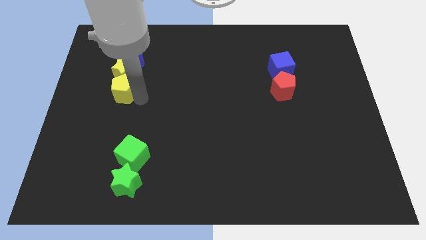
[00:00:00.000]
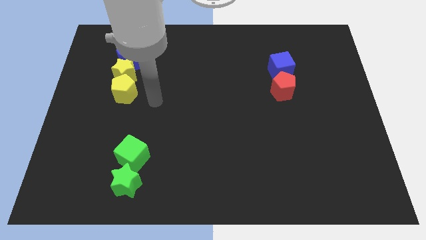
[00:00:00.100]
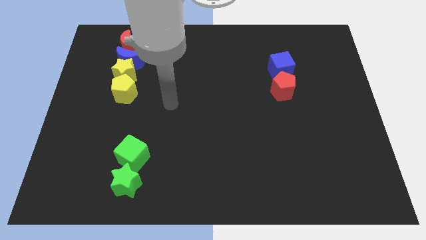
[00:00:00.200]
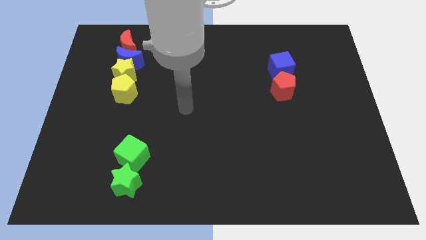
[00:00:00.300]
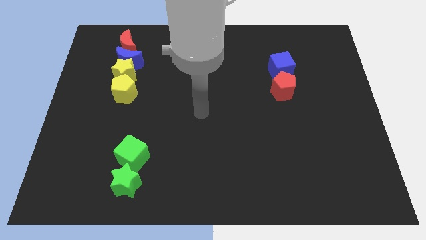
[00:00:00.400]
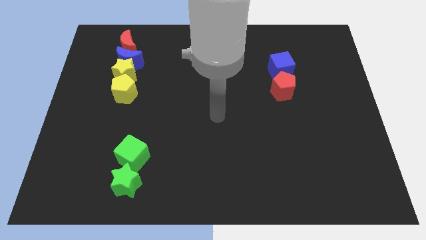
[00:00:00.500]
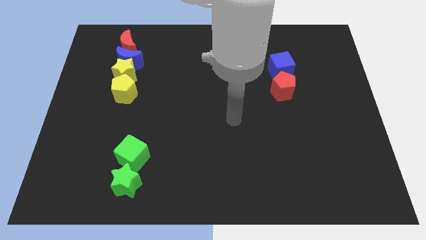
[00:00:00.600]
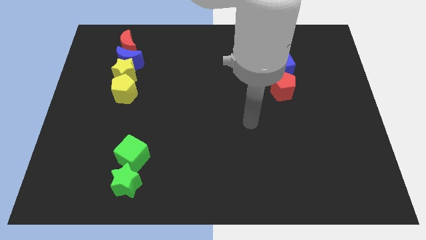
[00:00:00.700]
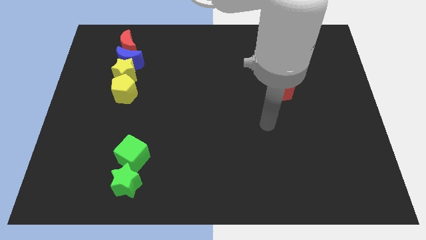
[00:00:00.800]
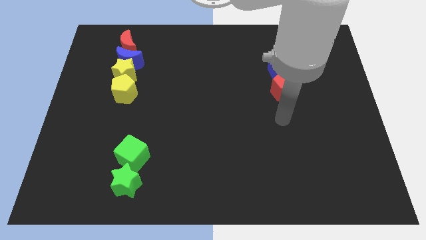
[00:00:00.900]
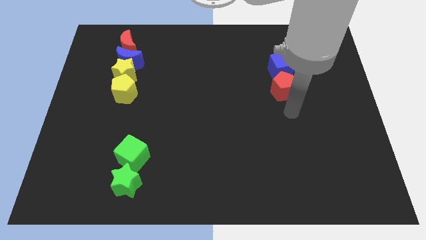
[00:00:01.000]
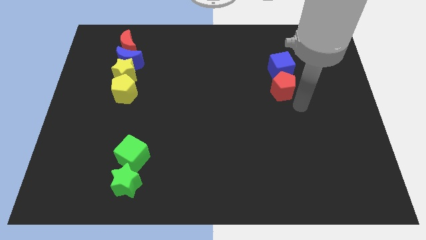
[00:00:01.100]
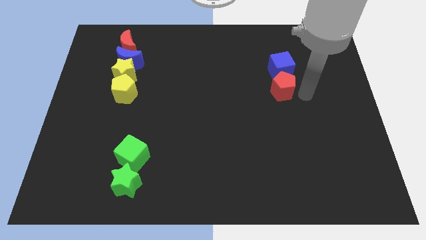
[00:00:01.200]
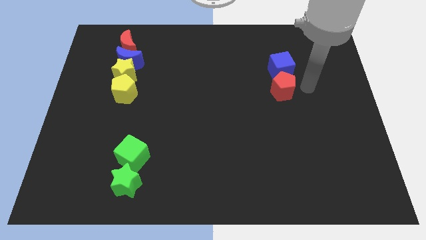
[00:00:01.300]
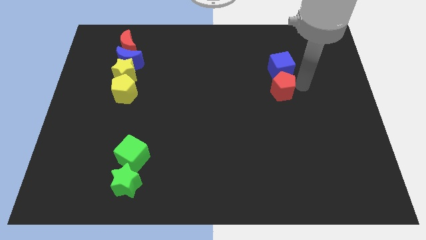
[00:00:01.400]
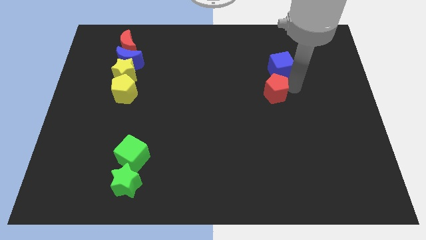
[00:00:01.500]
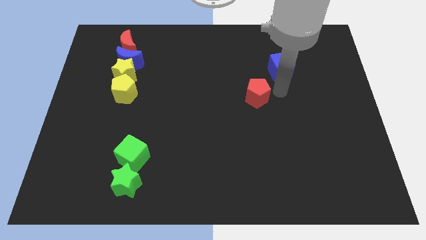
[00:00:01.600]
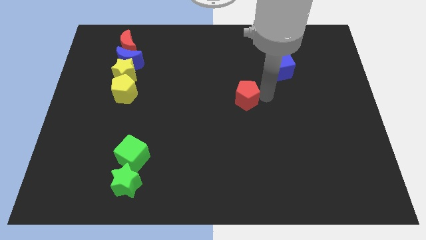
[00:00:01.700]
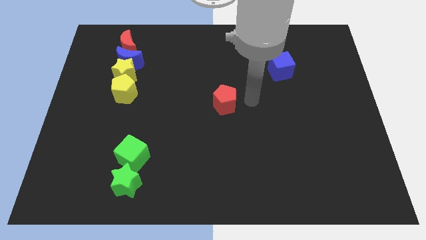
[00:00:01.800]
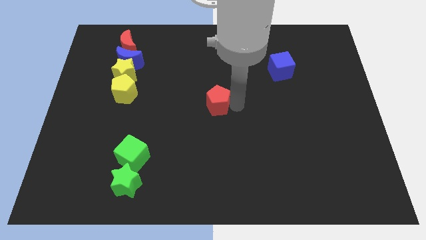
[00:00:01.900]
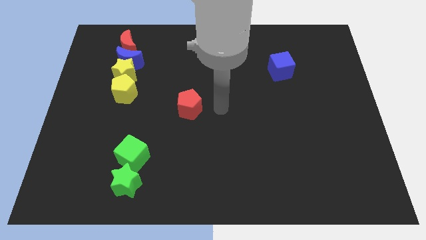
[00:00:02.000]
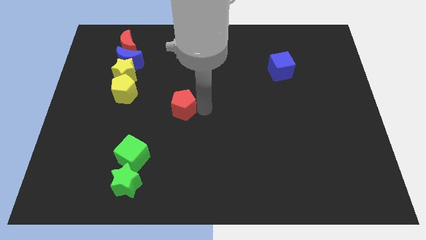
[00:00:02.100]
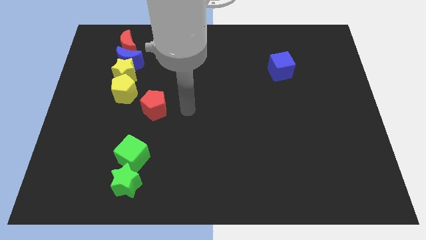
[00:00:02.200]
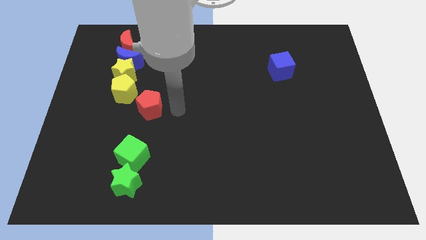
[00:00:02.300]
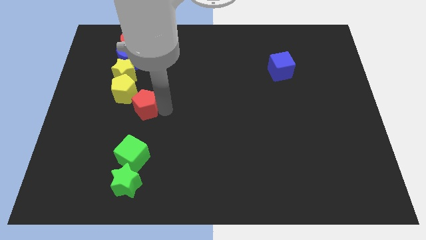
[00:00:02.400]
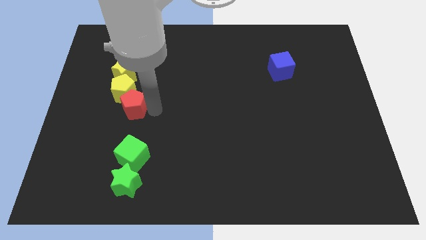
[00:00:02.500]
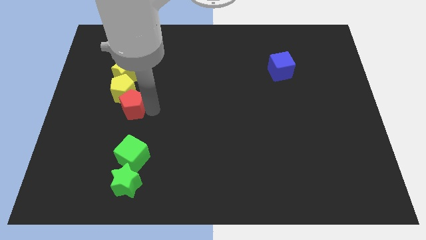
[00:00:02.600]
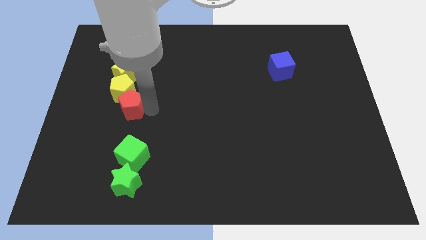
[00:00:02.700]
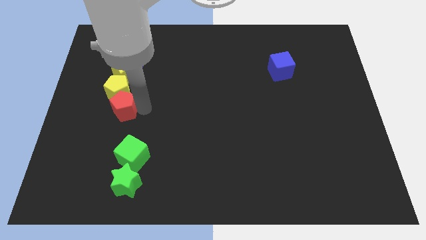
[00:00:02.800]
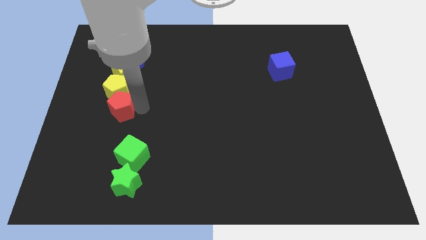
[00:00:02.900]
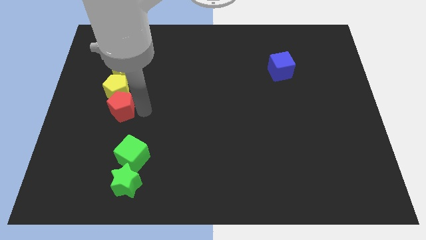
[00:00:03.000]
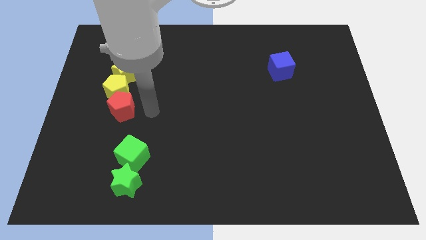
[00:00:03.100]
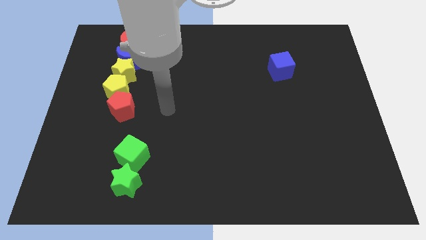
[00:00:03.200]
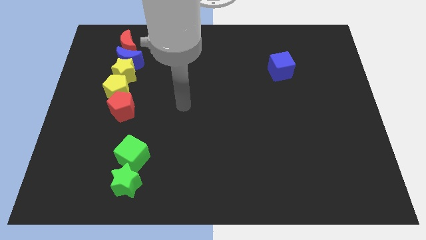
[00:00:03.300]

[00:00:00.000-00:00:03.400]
put the red prentagon below the yellow pentagon

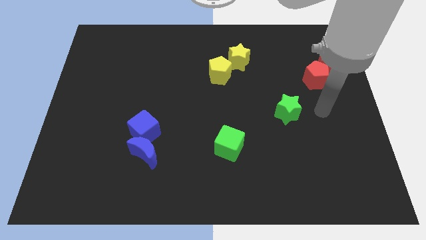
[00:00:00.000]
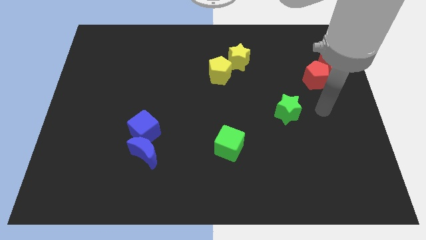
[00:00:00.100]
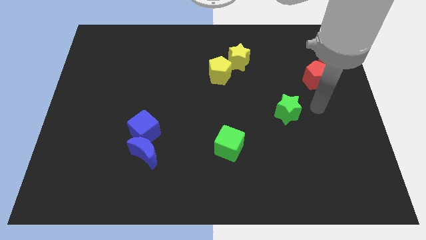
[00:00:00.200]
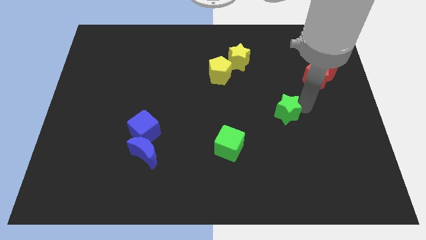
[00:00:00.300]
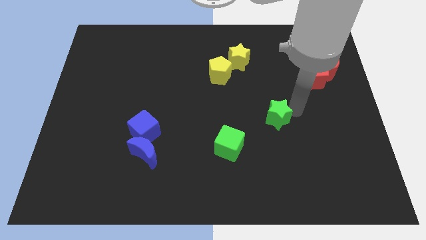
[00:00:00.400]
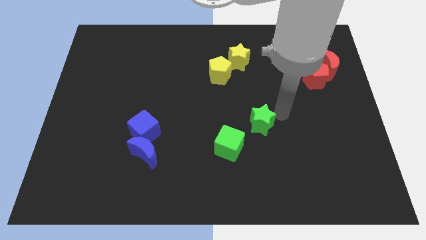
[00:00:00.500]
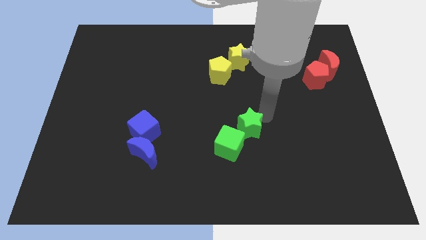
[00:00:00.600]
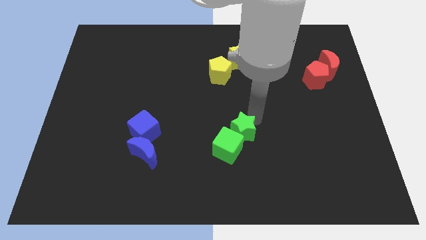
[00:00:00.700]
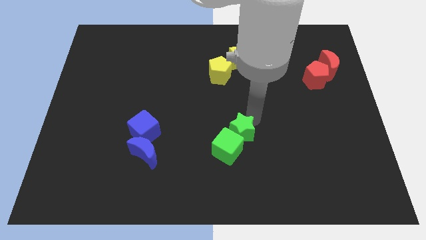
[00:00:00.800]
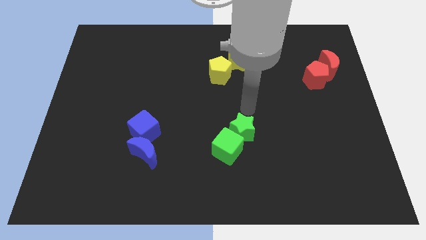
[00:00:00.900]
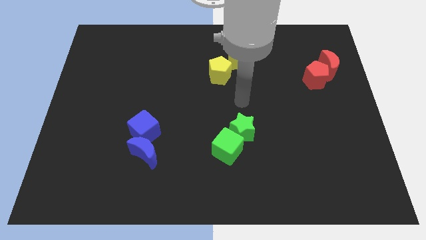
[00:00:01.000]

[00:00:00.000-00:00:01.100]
move green star into the green cube

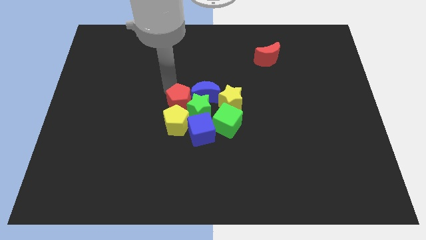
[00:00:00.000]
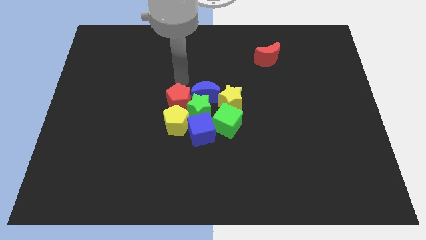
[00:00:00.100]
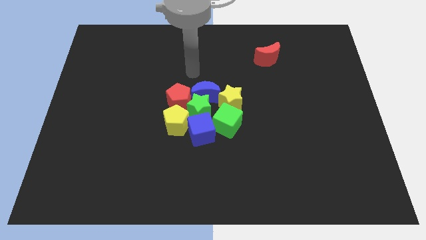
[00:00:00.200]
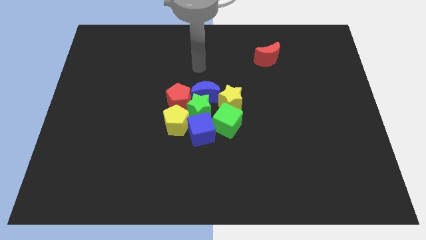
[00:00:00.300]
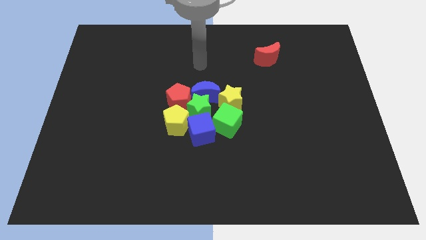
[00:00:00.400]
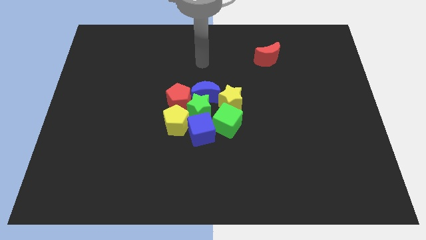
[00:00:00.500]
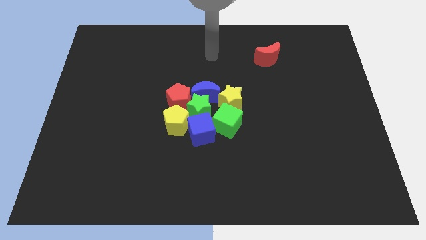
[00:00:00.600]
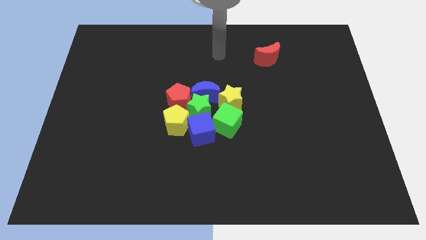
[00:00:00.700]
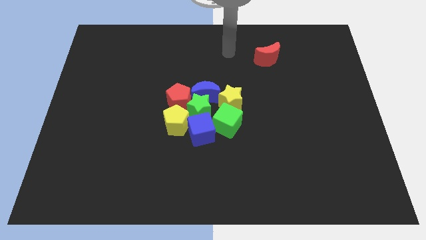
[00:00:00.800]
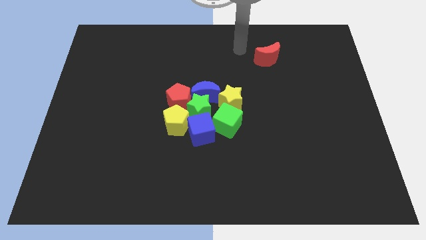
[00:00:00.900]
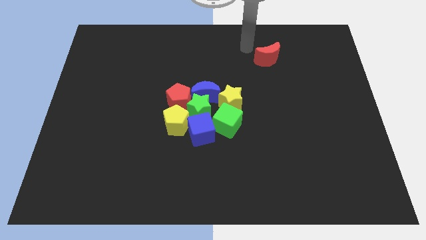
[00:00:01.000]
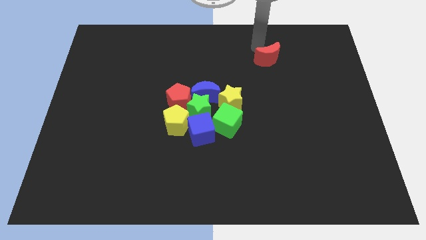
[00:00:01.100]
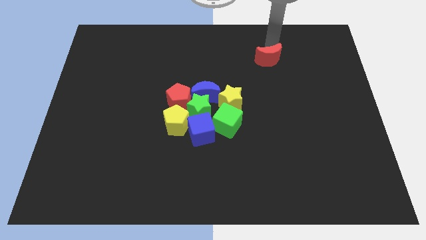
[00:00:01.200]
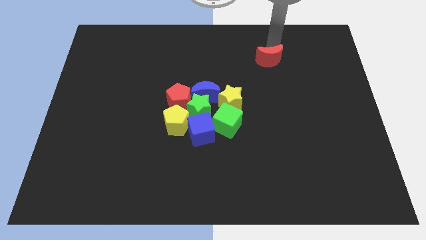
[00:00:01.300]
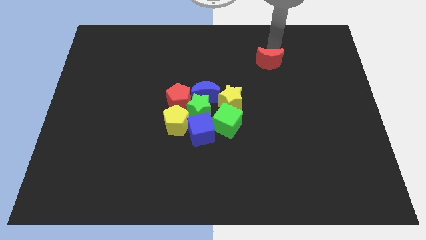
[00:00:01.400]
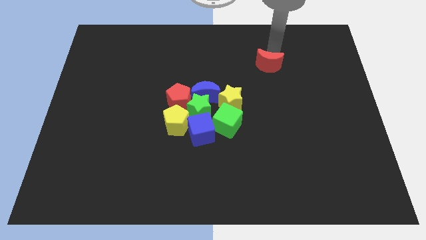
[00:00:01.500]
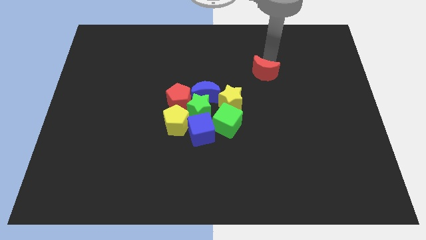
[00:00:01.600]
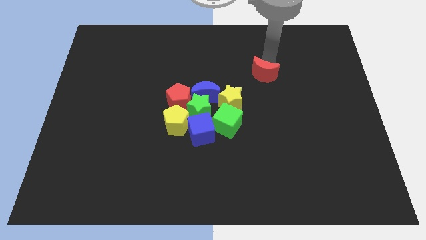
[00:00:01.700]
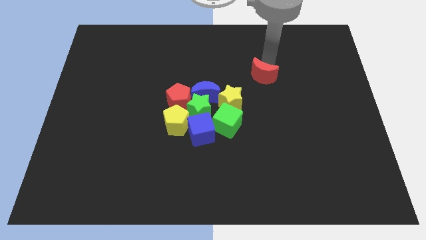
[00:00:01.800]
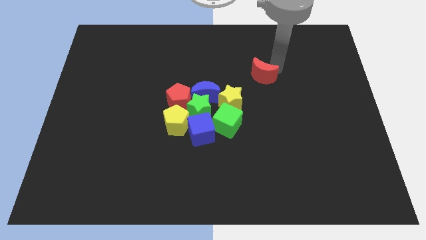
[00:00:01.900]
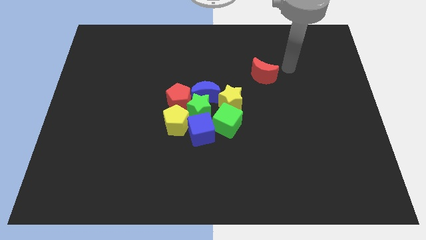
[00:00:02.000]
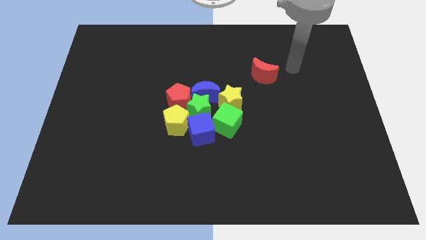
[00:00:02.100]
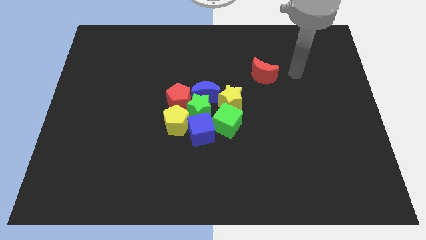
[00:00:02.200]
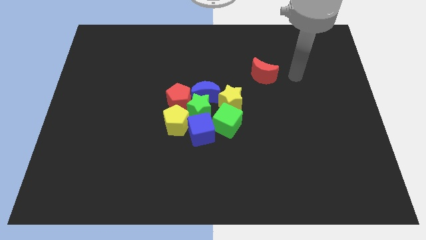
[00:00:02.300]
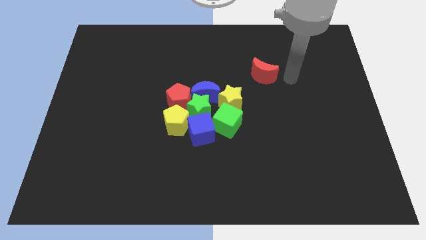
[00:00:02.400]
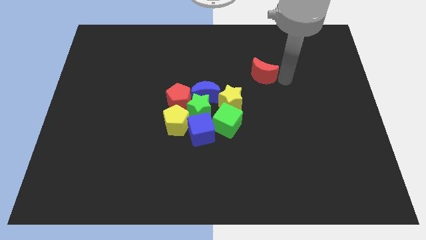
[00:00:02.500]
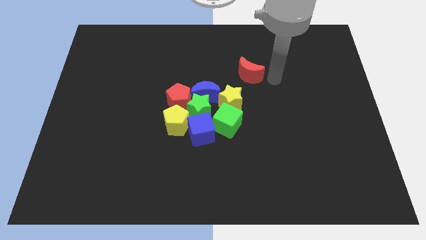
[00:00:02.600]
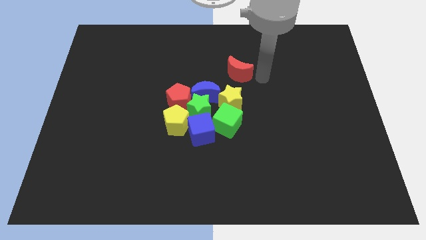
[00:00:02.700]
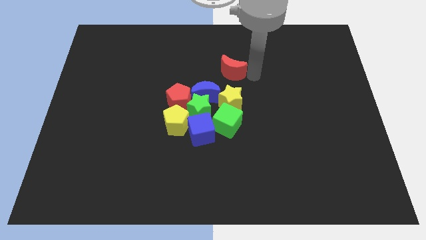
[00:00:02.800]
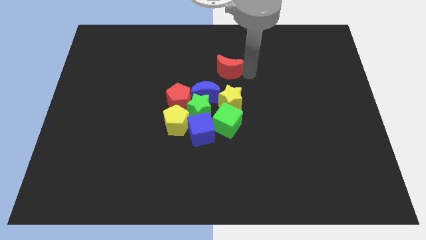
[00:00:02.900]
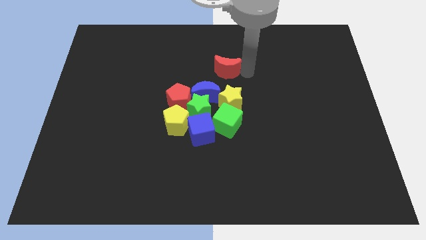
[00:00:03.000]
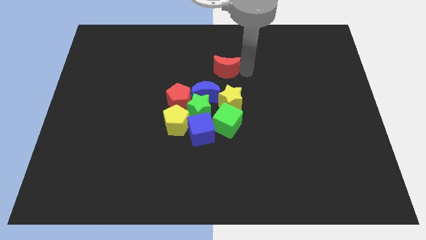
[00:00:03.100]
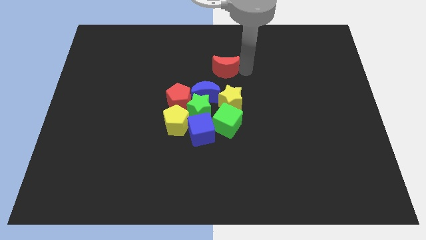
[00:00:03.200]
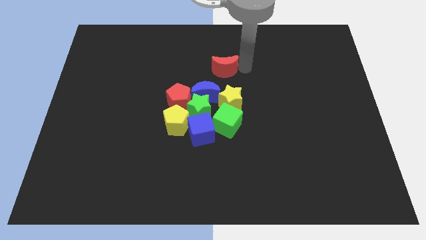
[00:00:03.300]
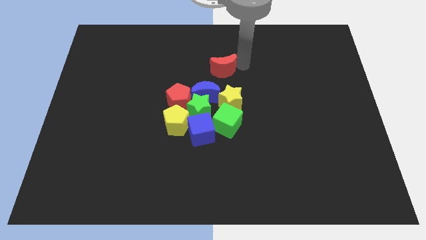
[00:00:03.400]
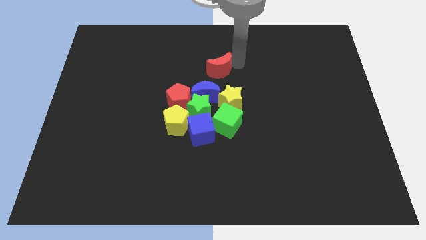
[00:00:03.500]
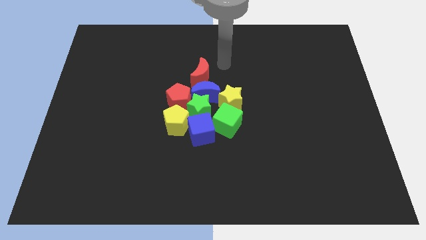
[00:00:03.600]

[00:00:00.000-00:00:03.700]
place the red moon at the top of the blue crescent

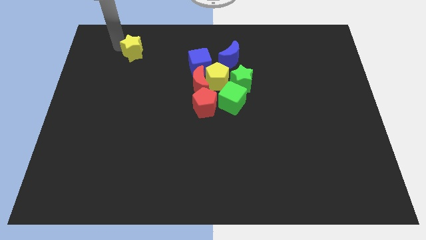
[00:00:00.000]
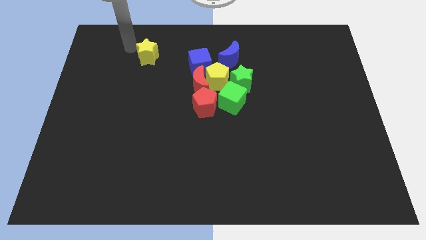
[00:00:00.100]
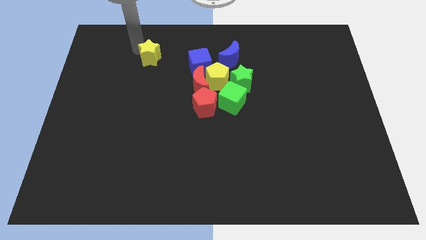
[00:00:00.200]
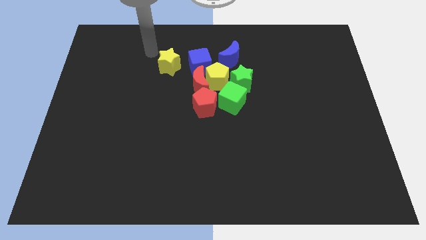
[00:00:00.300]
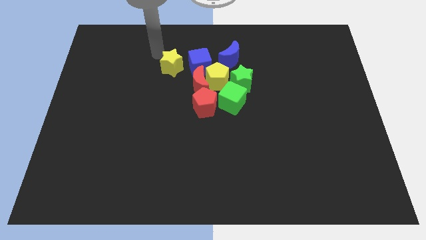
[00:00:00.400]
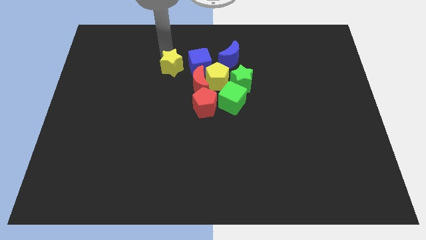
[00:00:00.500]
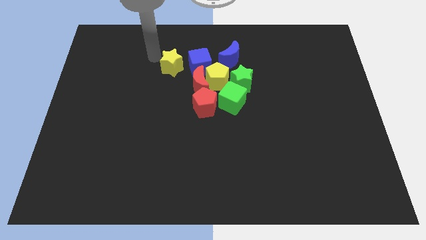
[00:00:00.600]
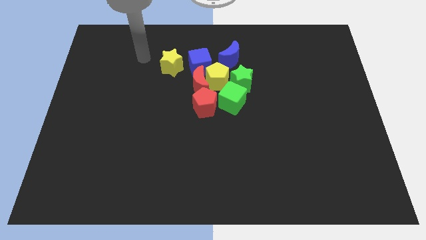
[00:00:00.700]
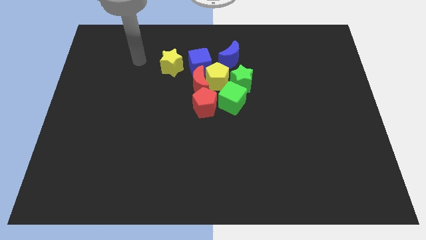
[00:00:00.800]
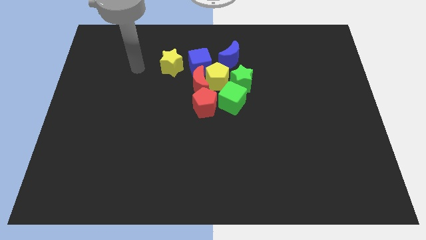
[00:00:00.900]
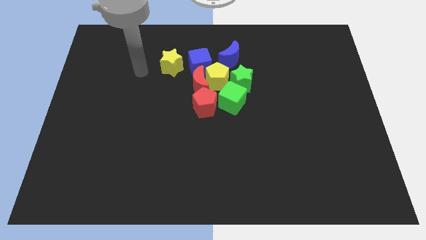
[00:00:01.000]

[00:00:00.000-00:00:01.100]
push the yellow star left to the blue cube
